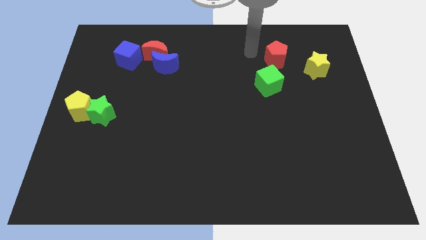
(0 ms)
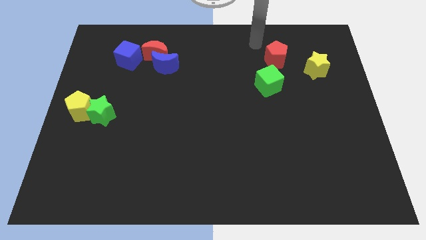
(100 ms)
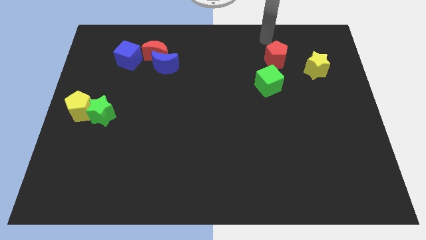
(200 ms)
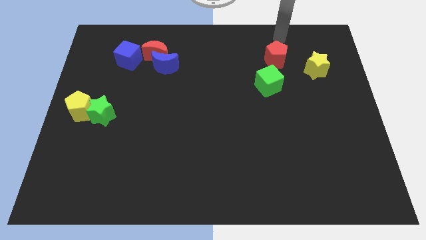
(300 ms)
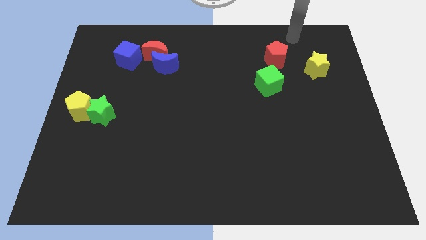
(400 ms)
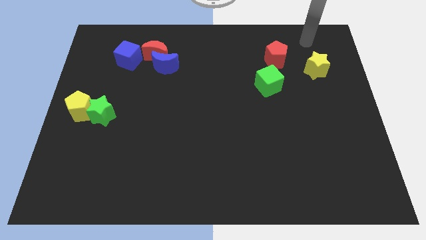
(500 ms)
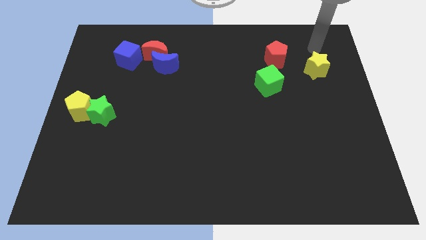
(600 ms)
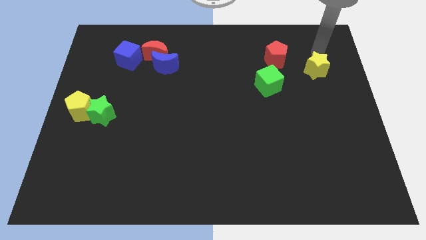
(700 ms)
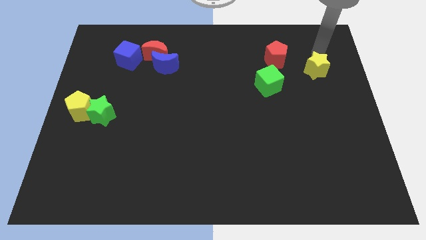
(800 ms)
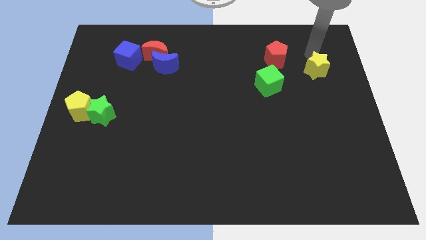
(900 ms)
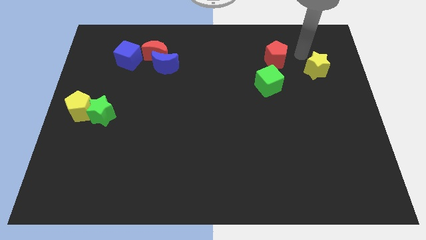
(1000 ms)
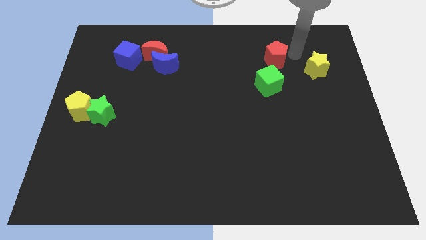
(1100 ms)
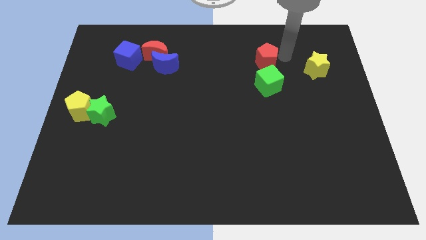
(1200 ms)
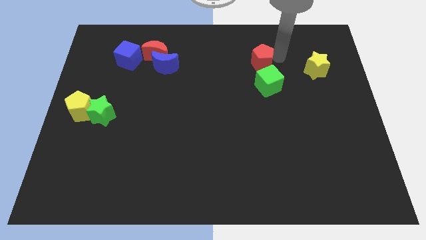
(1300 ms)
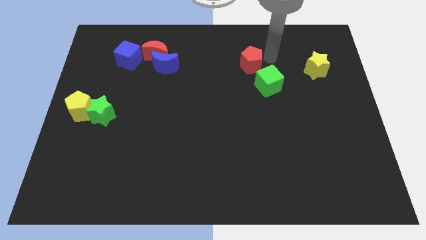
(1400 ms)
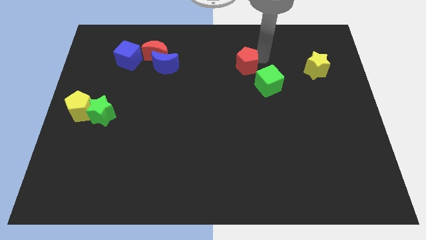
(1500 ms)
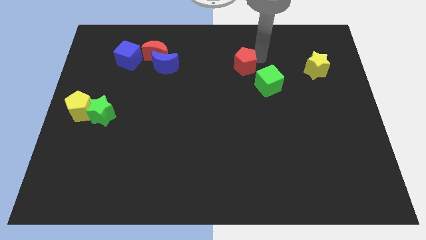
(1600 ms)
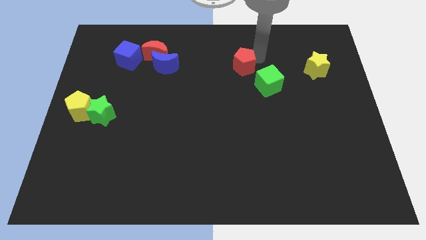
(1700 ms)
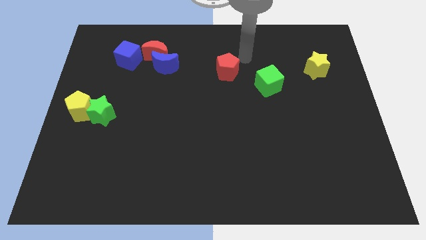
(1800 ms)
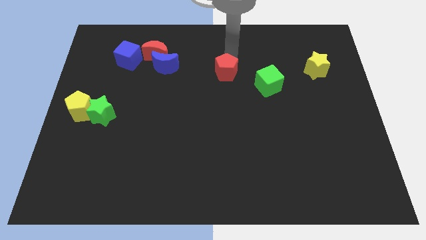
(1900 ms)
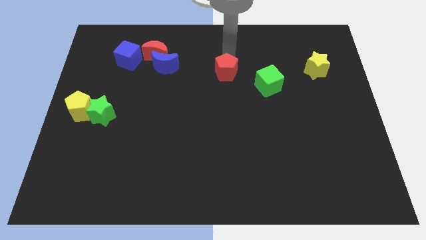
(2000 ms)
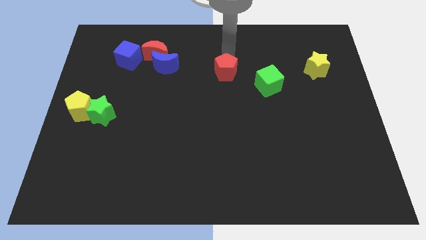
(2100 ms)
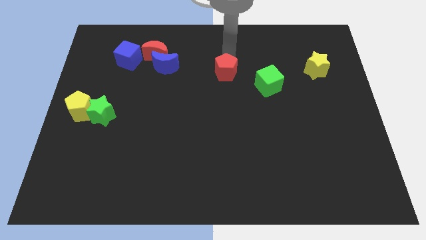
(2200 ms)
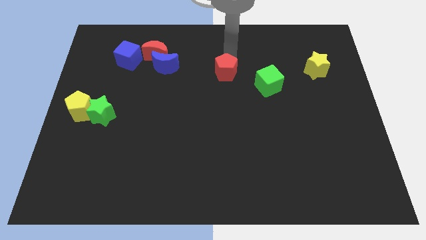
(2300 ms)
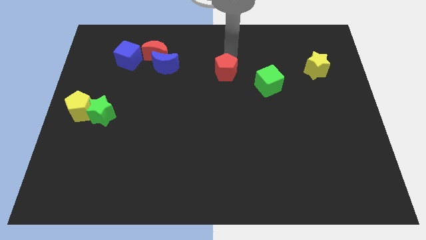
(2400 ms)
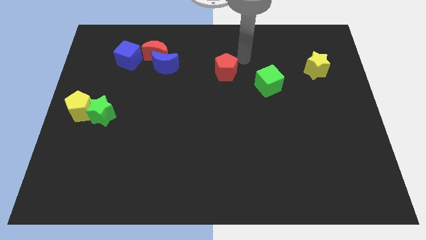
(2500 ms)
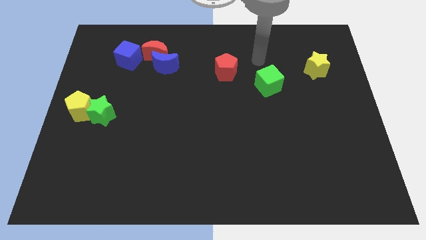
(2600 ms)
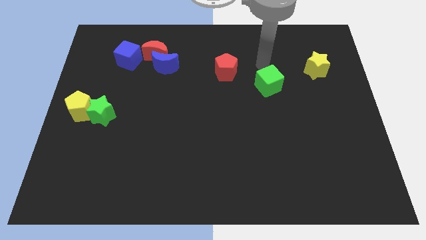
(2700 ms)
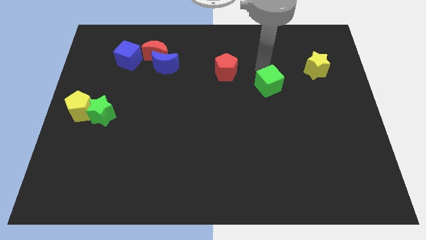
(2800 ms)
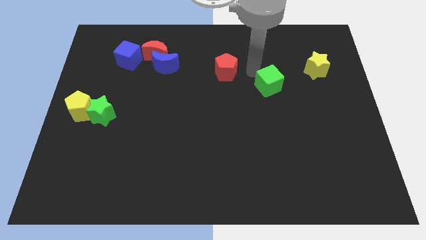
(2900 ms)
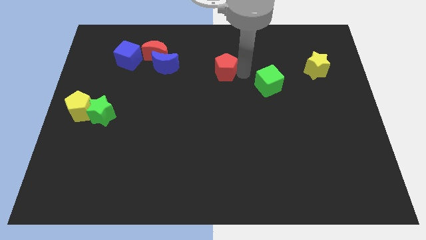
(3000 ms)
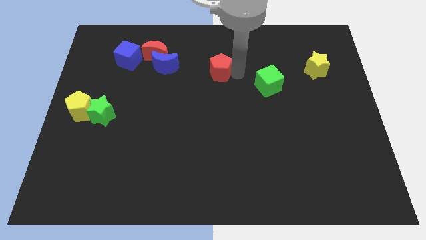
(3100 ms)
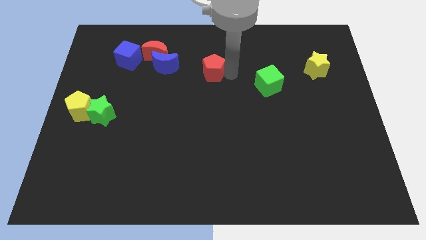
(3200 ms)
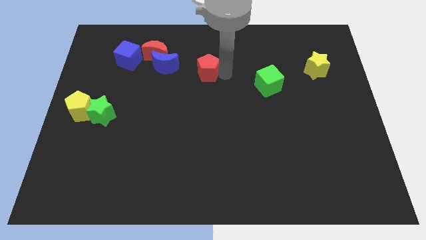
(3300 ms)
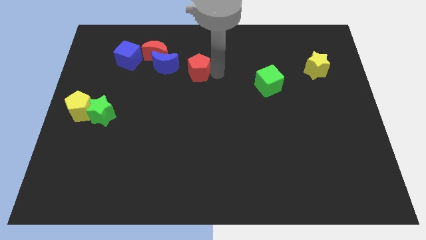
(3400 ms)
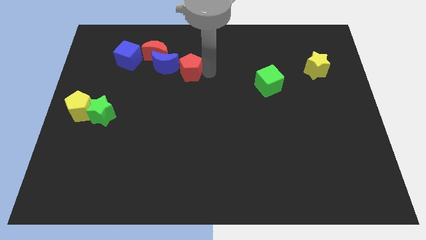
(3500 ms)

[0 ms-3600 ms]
separate red pentagon from green cube

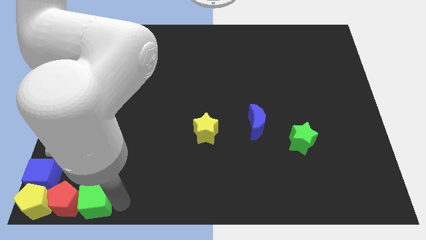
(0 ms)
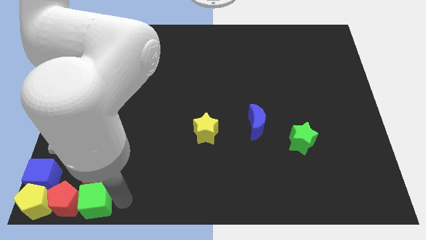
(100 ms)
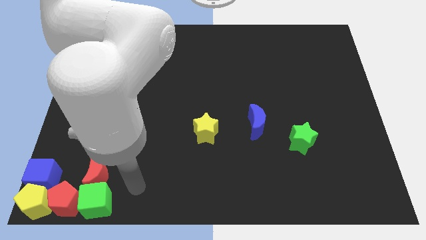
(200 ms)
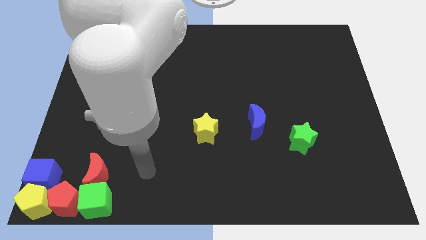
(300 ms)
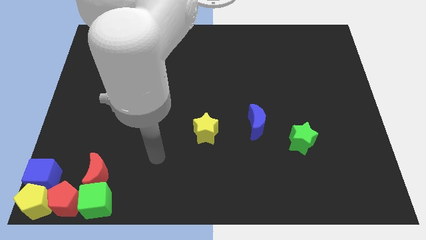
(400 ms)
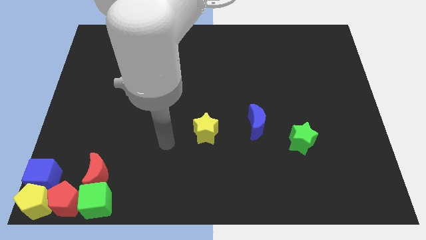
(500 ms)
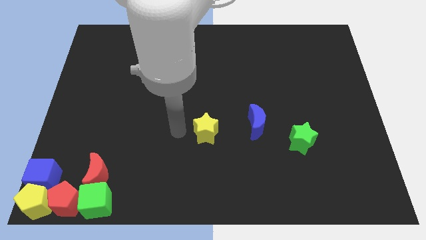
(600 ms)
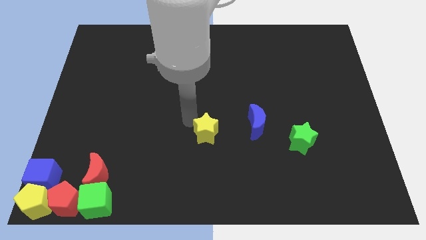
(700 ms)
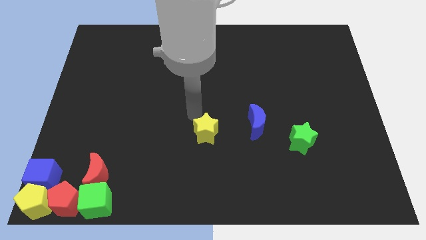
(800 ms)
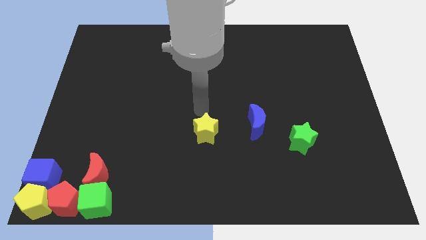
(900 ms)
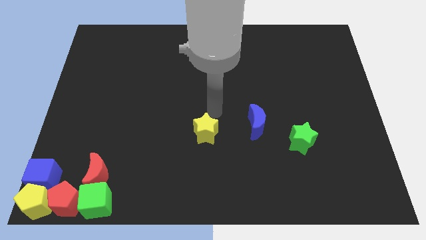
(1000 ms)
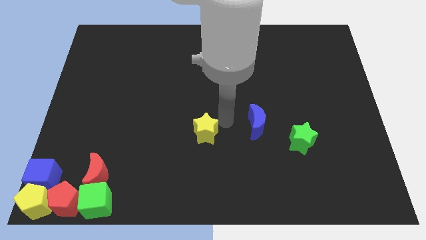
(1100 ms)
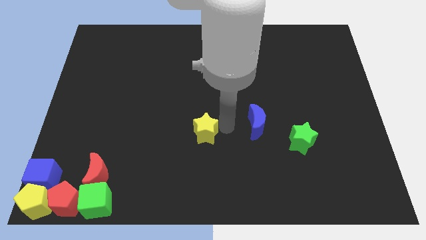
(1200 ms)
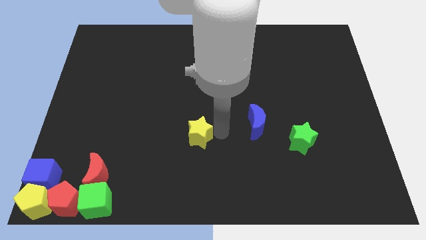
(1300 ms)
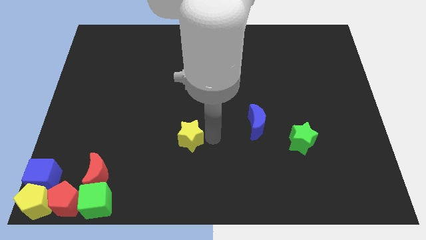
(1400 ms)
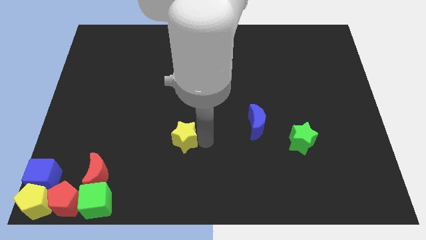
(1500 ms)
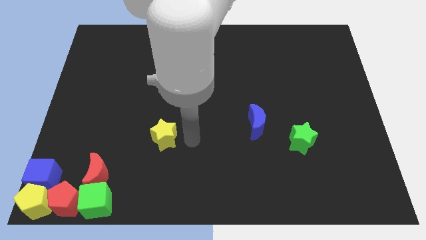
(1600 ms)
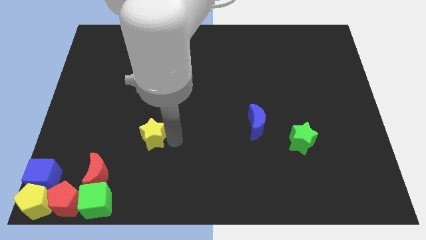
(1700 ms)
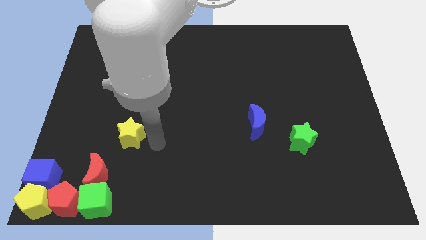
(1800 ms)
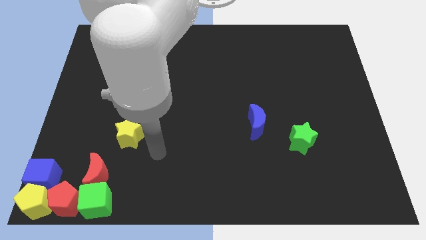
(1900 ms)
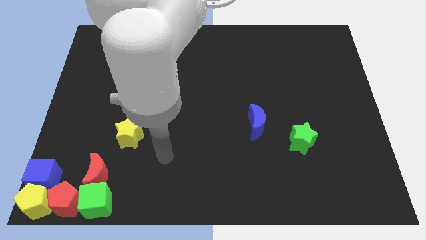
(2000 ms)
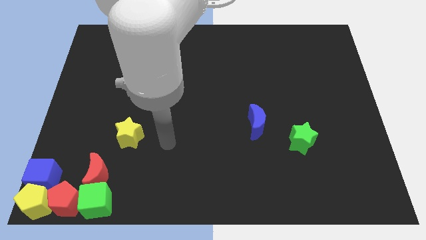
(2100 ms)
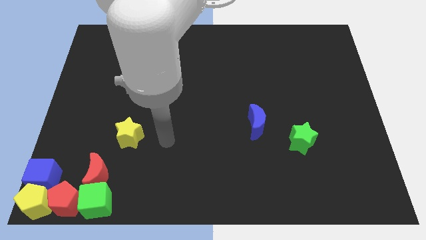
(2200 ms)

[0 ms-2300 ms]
move the yellow star towards red moon

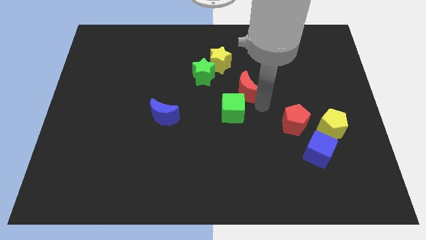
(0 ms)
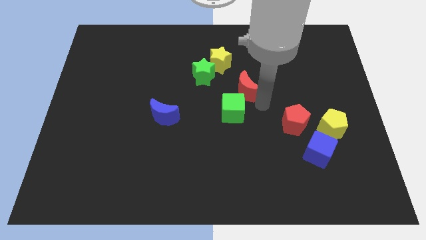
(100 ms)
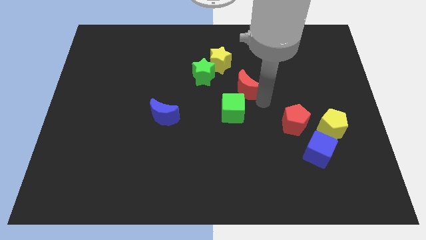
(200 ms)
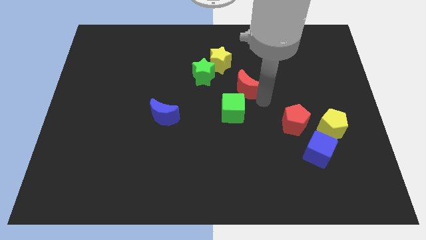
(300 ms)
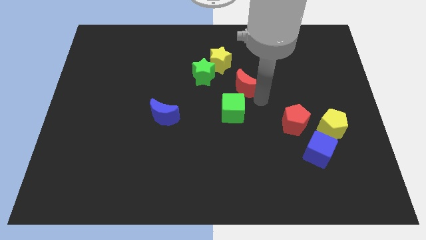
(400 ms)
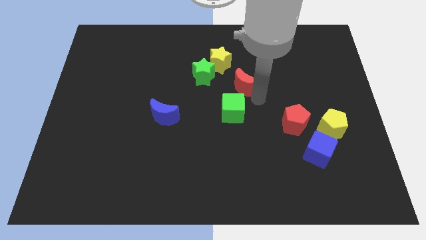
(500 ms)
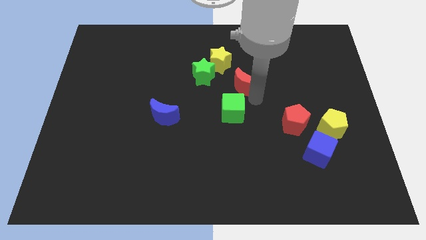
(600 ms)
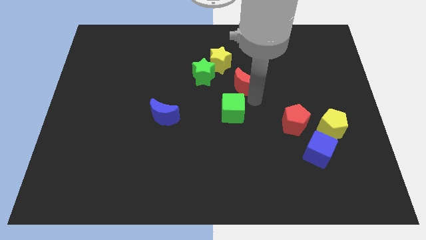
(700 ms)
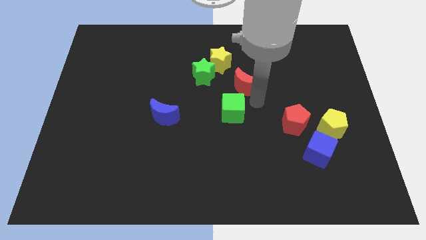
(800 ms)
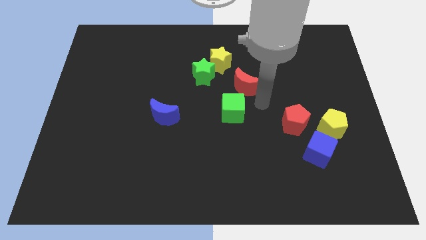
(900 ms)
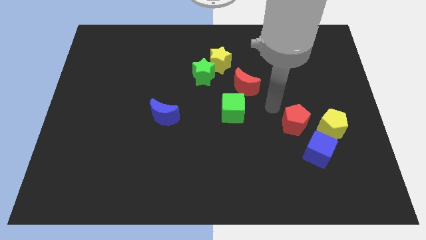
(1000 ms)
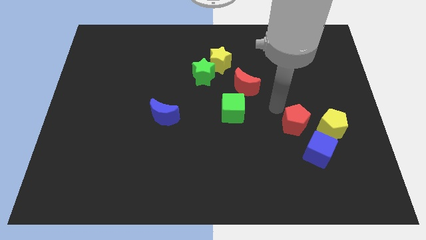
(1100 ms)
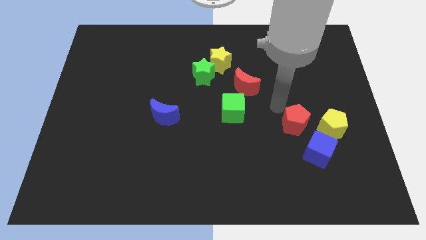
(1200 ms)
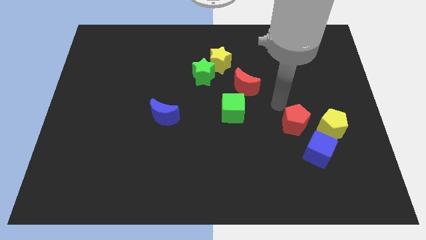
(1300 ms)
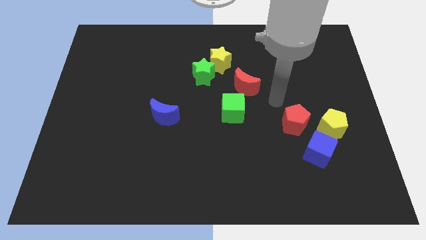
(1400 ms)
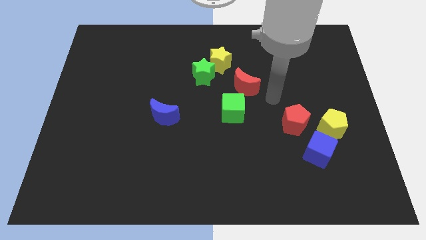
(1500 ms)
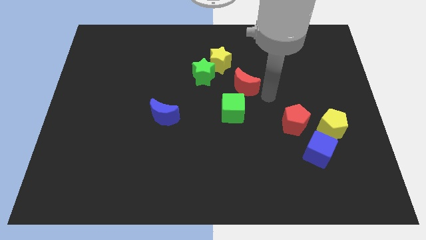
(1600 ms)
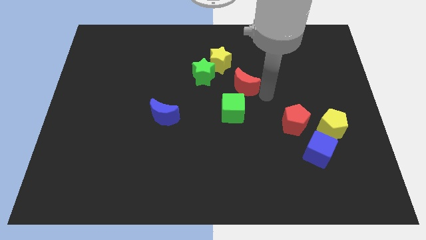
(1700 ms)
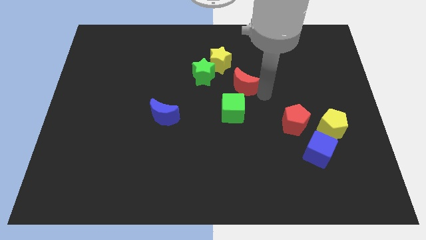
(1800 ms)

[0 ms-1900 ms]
place the red crescent above the green cube

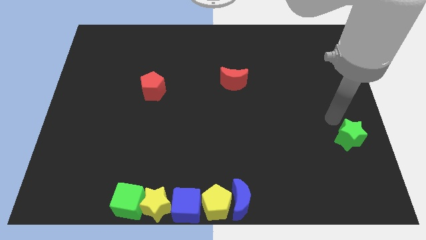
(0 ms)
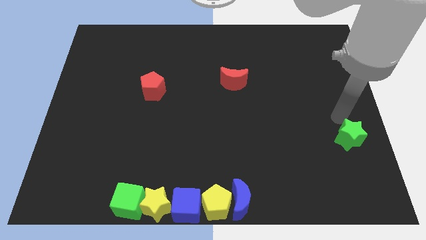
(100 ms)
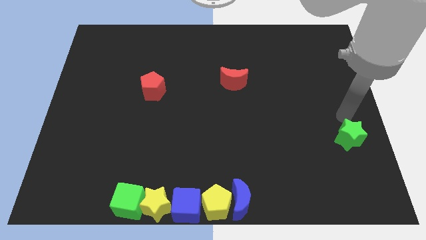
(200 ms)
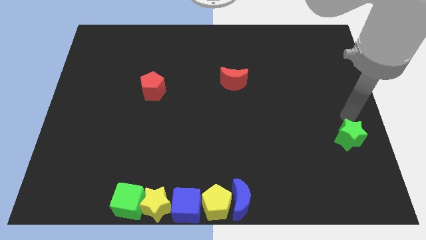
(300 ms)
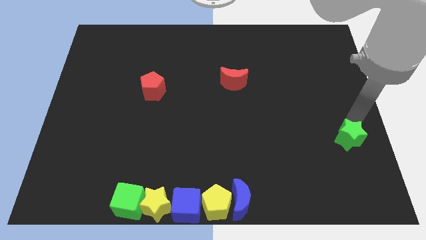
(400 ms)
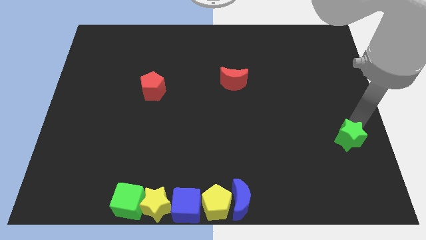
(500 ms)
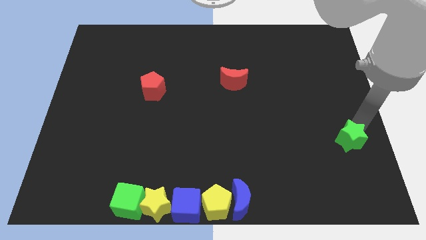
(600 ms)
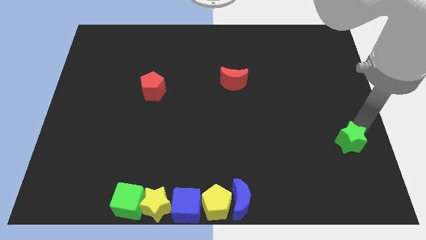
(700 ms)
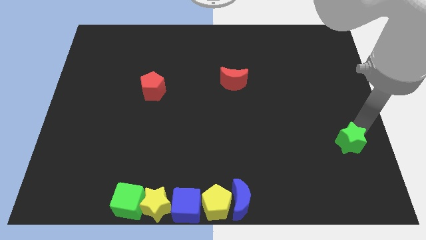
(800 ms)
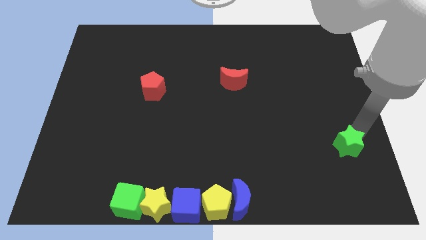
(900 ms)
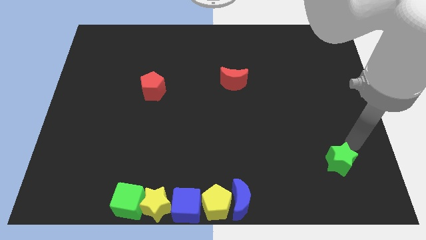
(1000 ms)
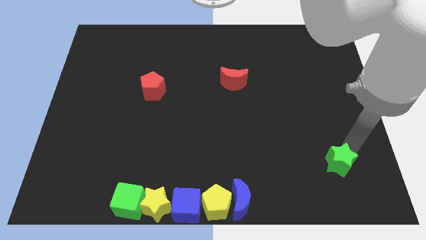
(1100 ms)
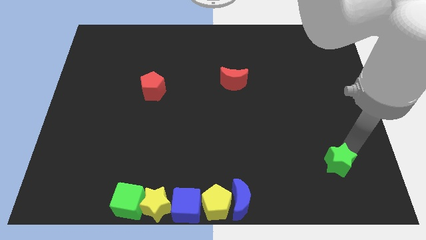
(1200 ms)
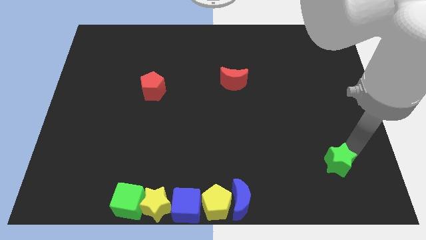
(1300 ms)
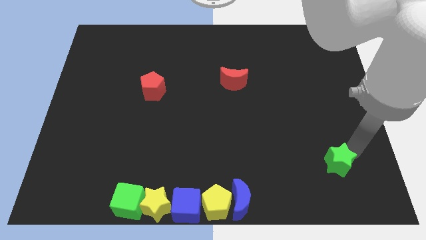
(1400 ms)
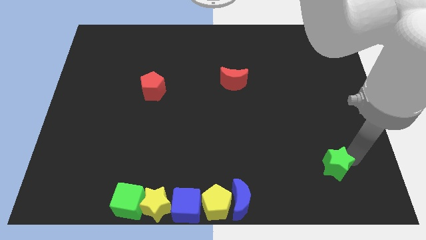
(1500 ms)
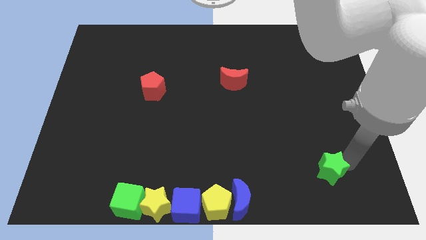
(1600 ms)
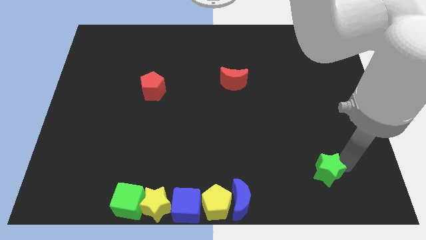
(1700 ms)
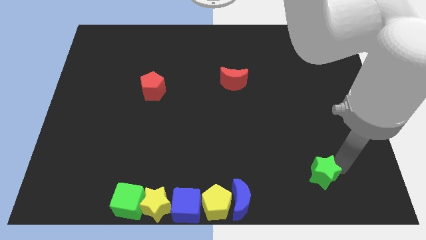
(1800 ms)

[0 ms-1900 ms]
push the green star towards the bottom of the board
